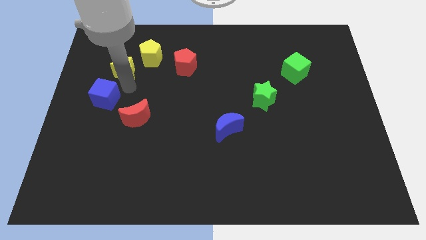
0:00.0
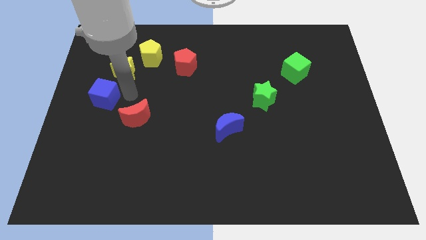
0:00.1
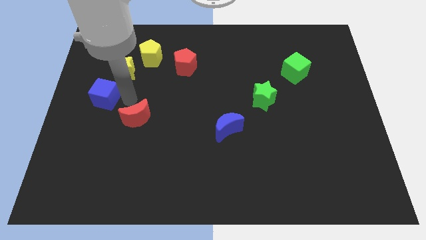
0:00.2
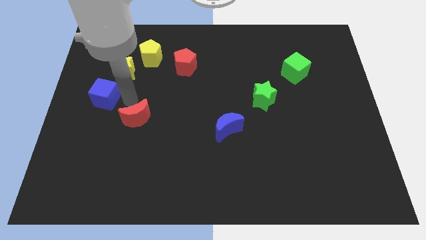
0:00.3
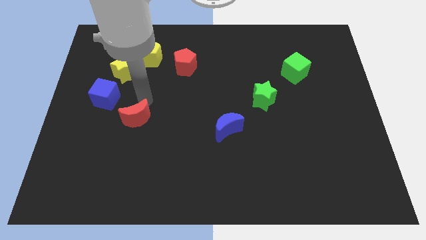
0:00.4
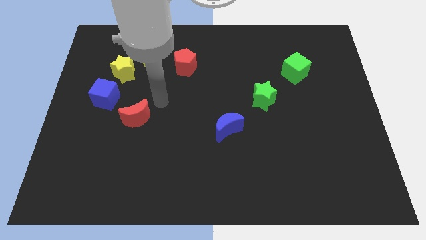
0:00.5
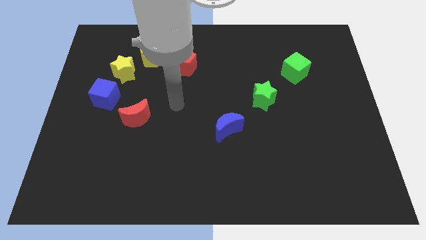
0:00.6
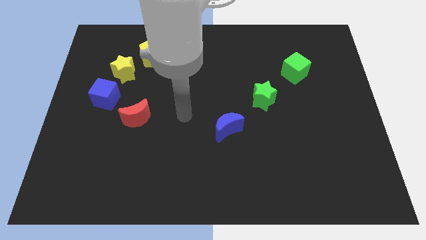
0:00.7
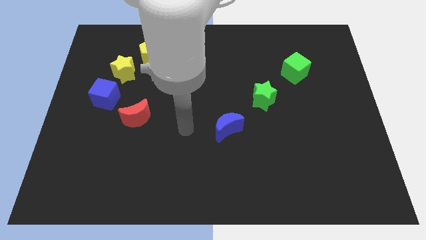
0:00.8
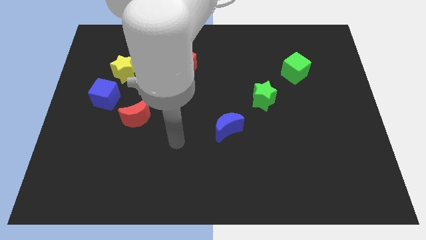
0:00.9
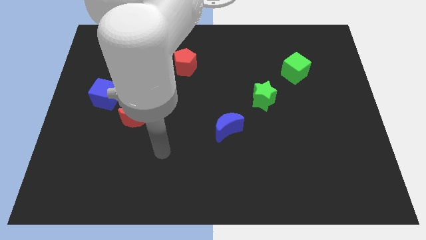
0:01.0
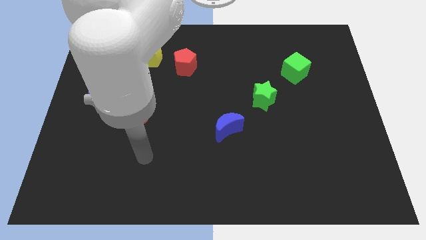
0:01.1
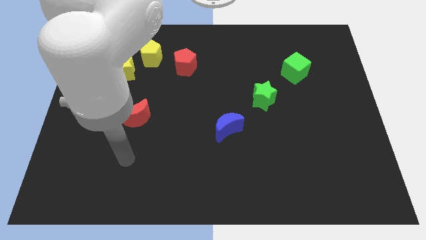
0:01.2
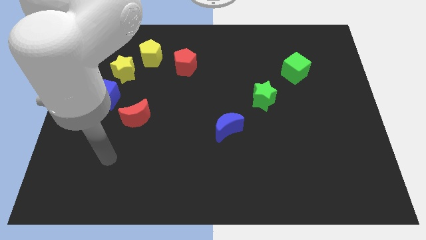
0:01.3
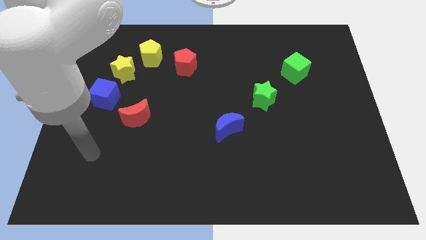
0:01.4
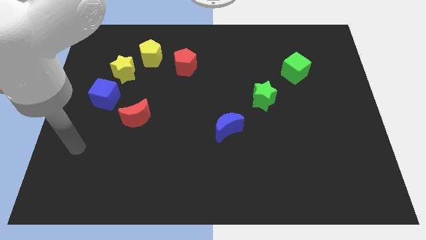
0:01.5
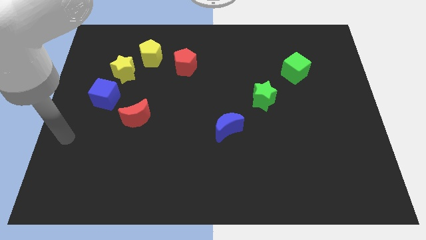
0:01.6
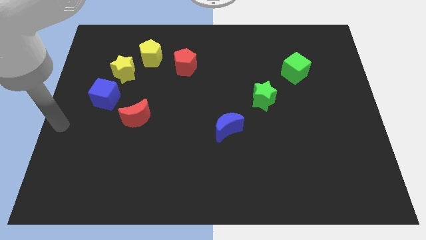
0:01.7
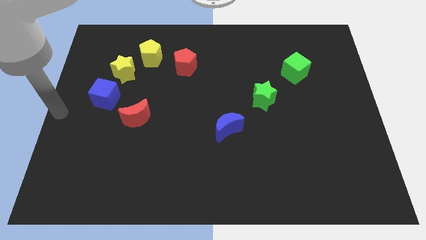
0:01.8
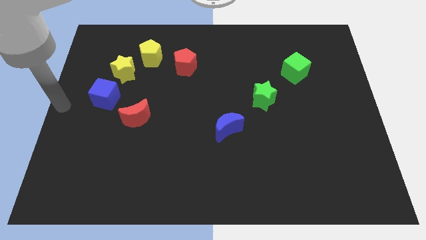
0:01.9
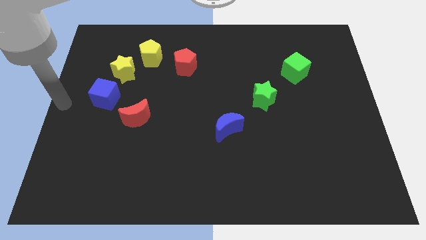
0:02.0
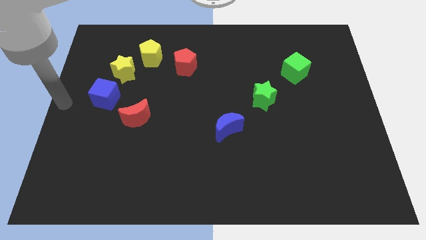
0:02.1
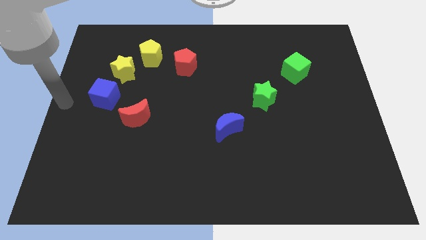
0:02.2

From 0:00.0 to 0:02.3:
move your arm and point to the left of blue cube

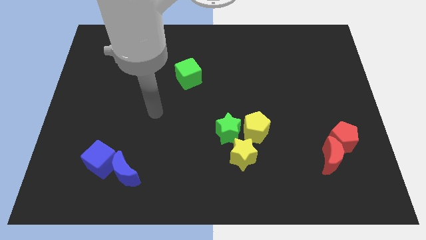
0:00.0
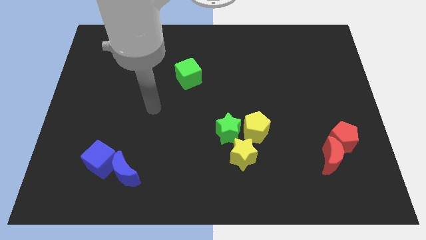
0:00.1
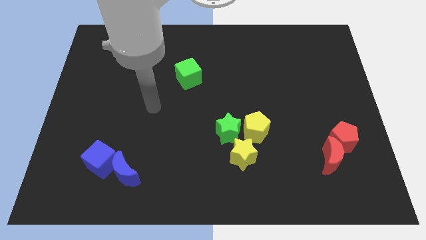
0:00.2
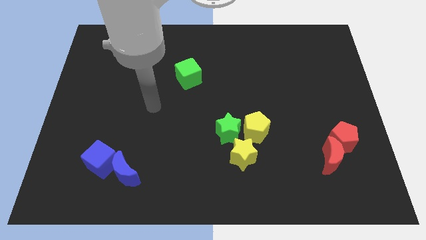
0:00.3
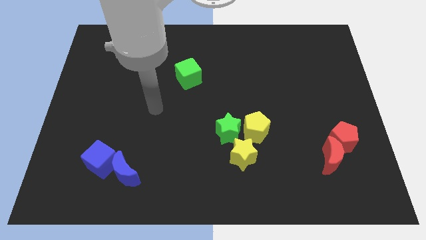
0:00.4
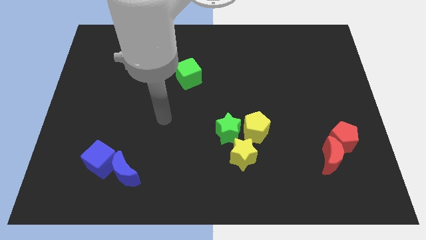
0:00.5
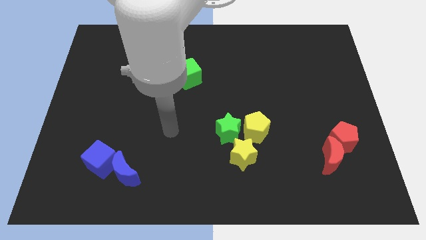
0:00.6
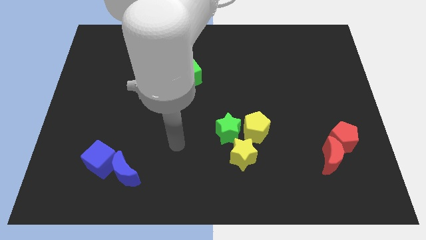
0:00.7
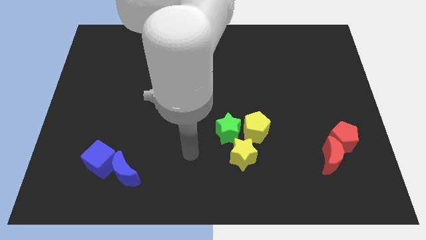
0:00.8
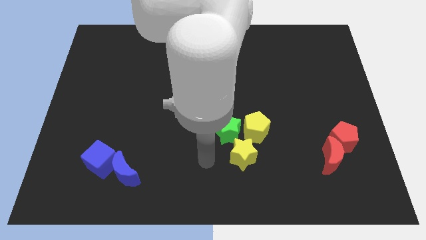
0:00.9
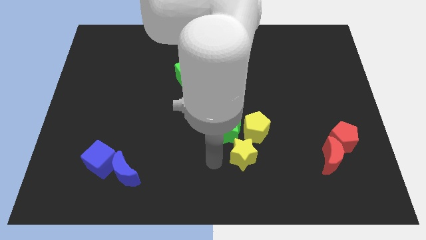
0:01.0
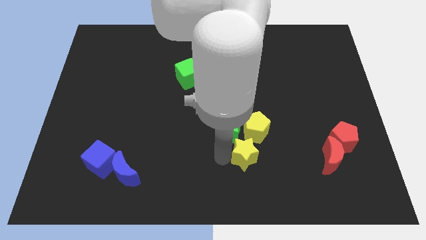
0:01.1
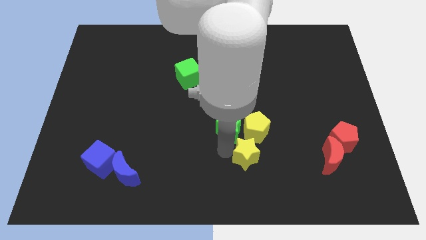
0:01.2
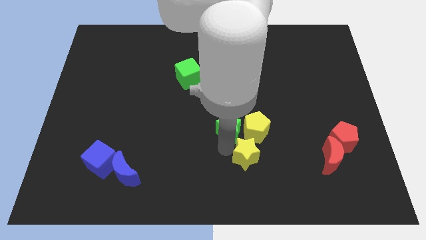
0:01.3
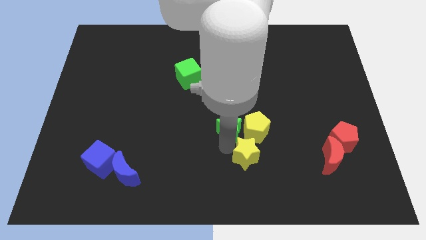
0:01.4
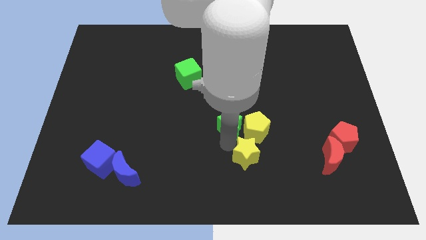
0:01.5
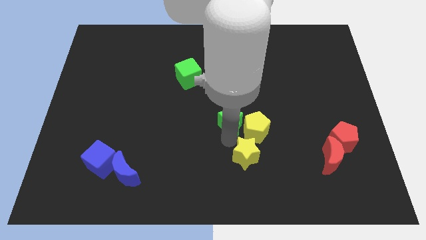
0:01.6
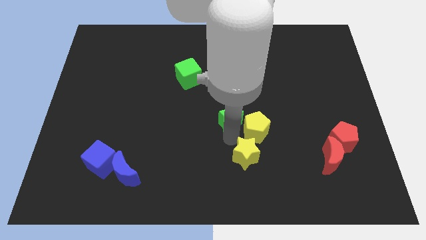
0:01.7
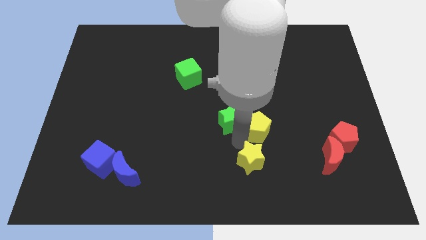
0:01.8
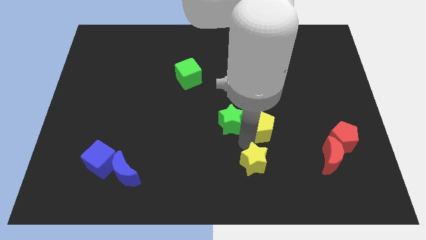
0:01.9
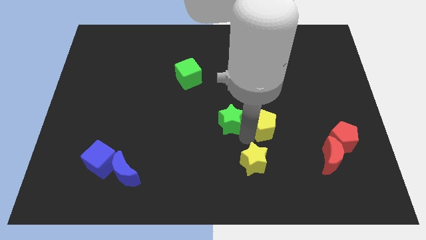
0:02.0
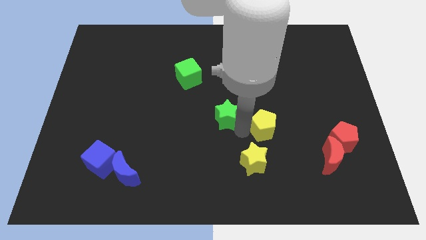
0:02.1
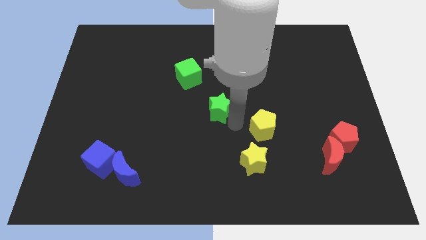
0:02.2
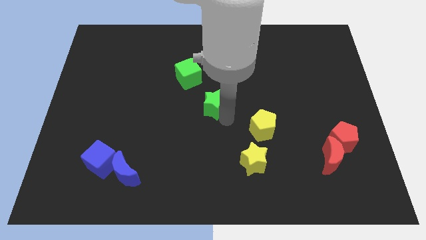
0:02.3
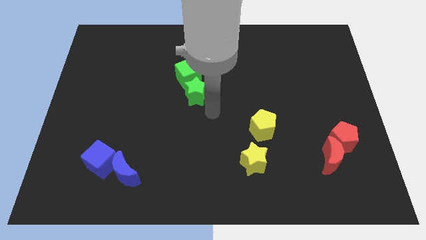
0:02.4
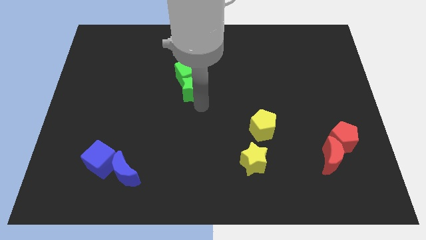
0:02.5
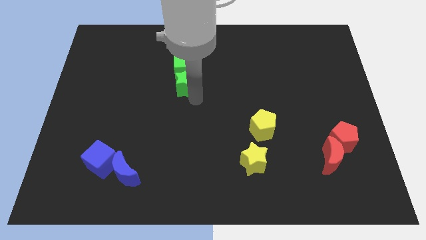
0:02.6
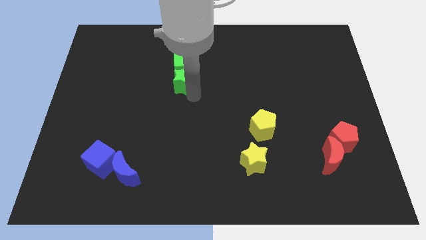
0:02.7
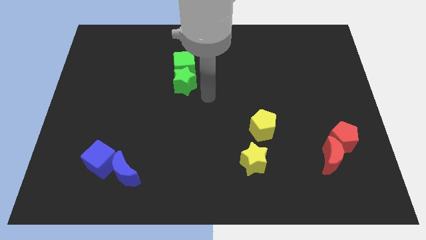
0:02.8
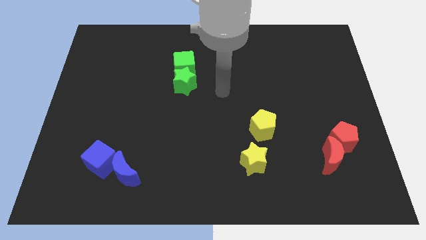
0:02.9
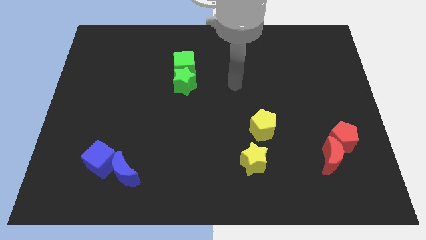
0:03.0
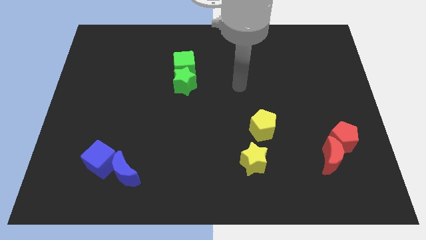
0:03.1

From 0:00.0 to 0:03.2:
move the green star into the green cube

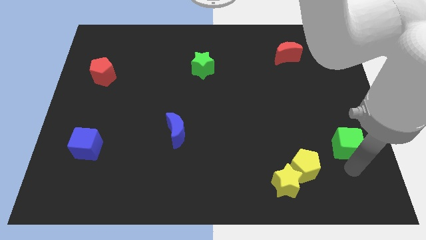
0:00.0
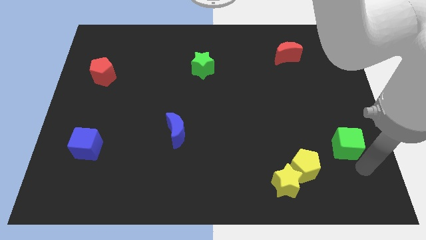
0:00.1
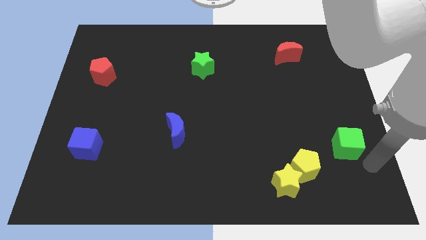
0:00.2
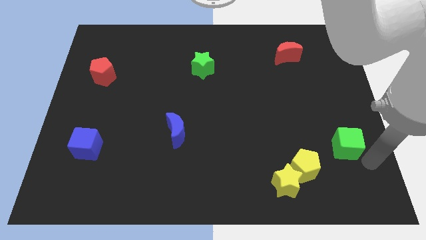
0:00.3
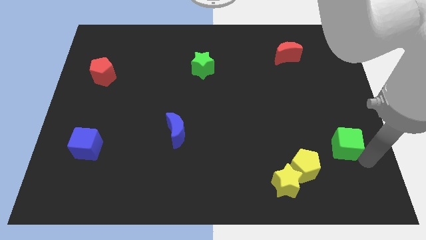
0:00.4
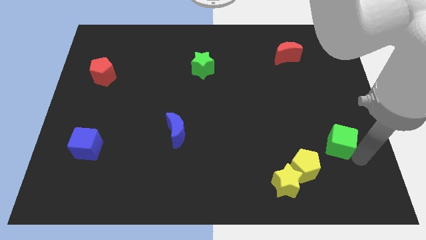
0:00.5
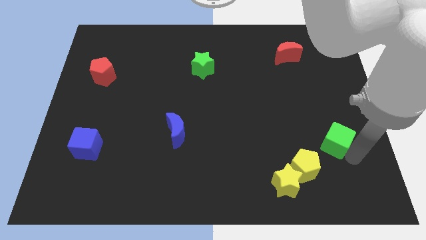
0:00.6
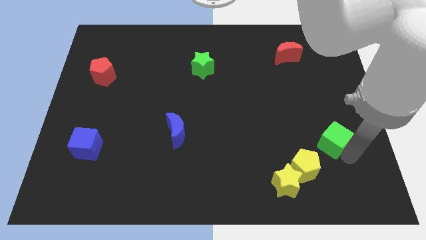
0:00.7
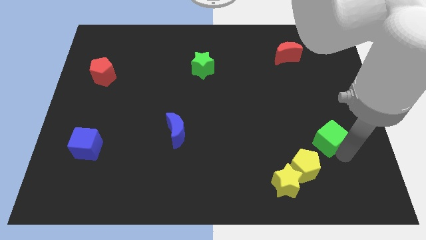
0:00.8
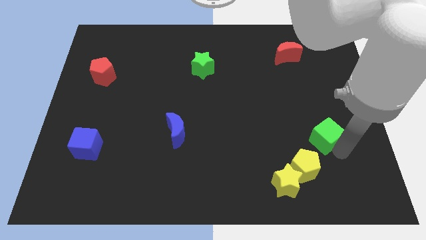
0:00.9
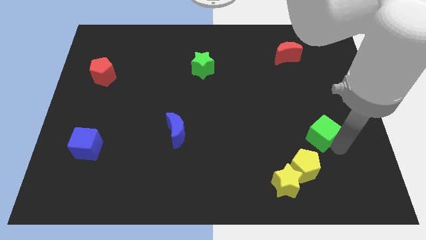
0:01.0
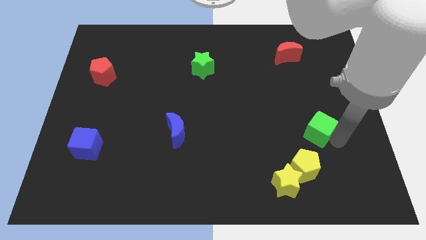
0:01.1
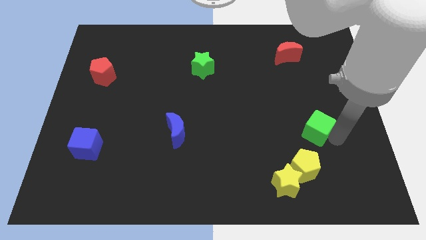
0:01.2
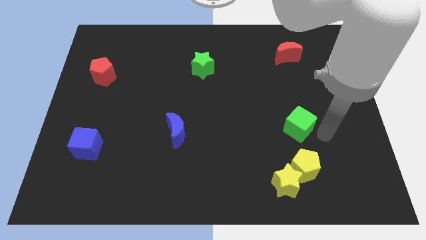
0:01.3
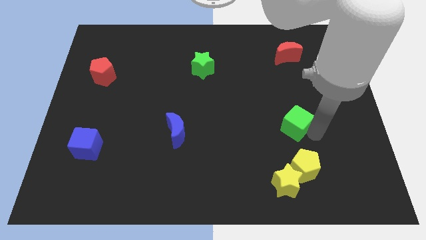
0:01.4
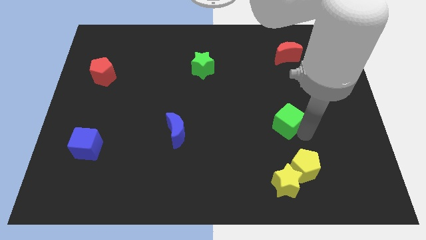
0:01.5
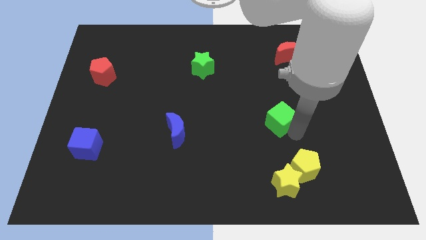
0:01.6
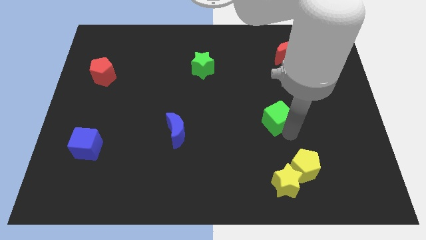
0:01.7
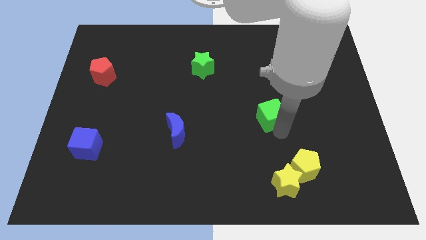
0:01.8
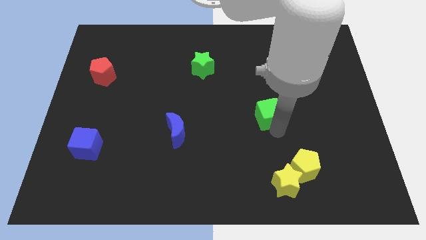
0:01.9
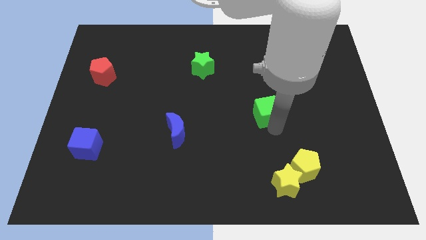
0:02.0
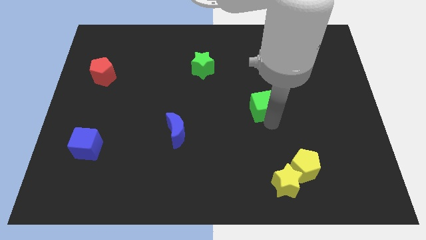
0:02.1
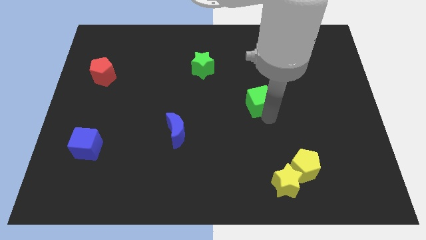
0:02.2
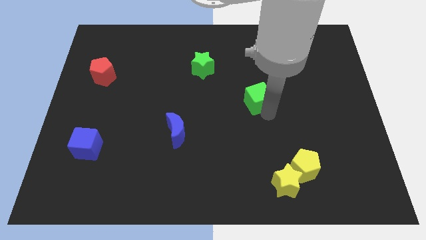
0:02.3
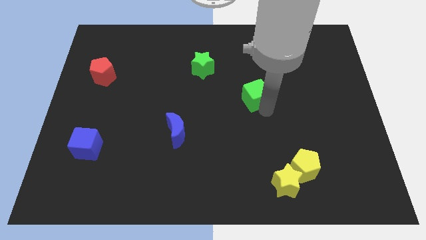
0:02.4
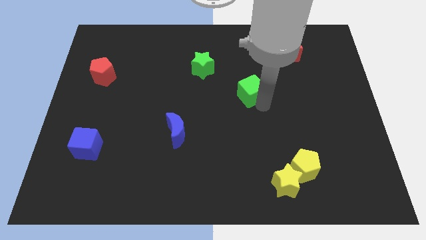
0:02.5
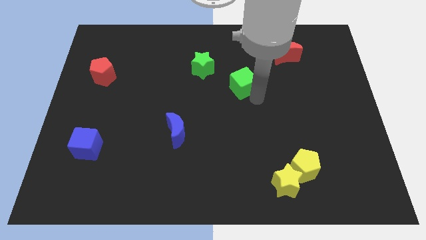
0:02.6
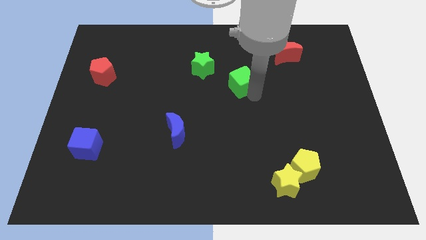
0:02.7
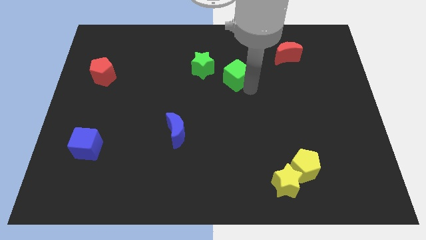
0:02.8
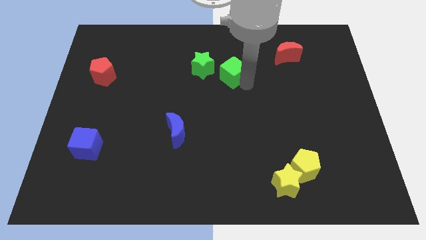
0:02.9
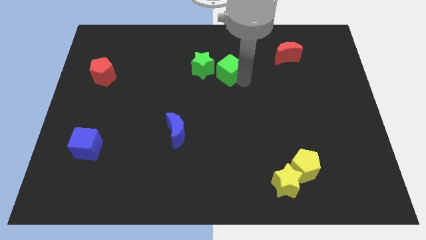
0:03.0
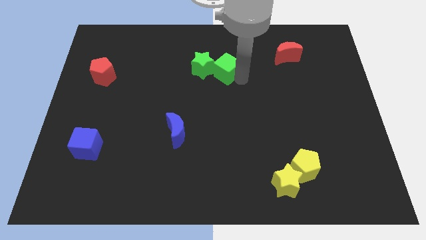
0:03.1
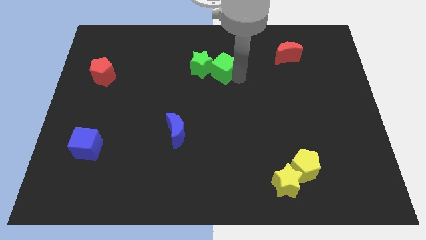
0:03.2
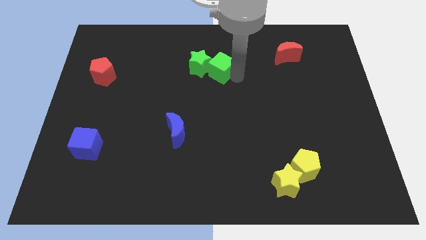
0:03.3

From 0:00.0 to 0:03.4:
push the green cube into the right side of the green star

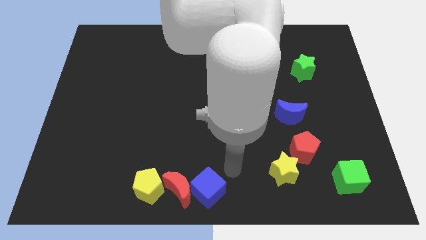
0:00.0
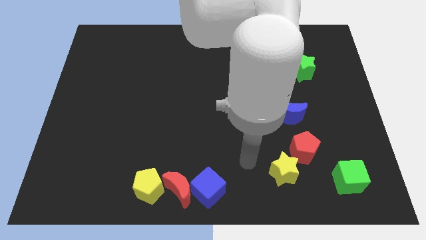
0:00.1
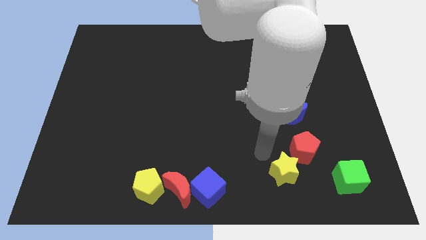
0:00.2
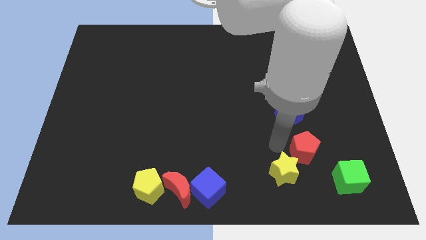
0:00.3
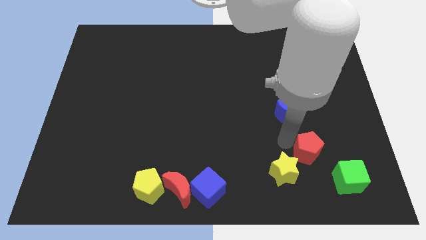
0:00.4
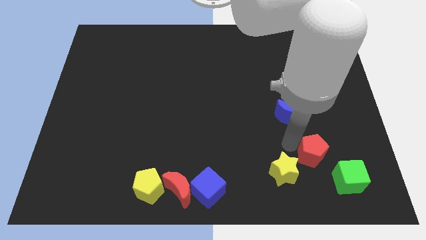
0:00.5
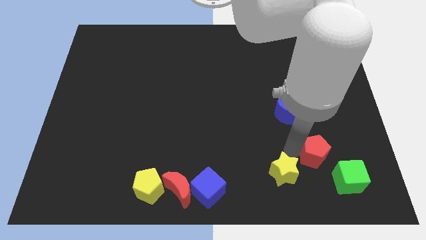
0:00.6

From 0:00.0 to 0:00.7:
tap the red pentagon
